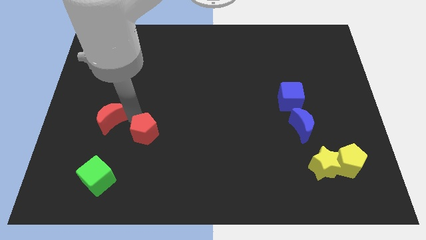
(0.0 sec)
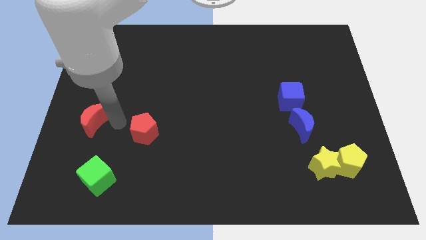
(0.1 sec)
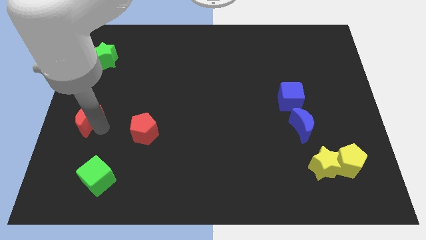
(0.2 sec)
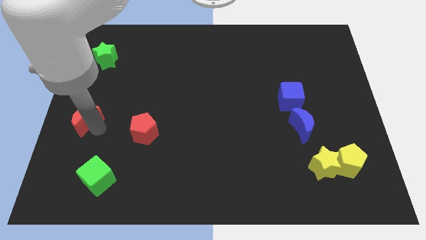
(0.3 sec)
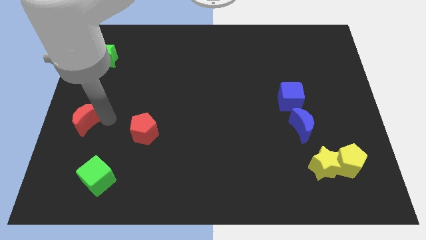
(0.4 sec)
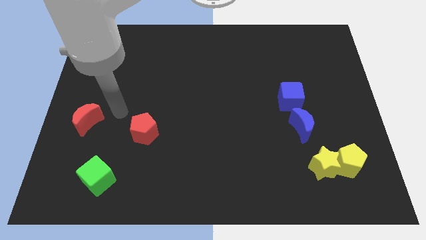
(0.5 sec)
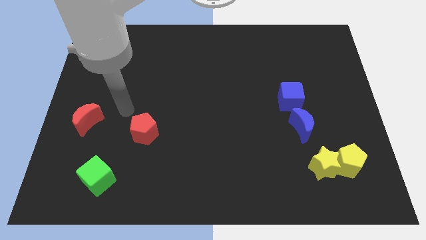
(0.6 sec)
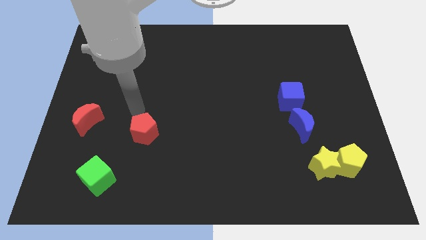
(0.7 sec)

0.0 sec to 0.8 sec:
slide the red crescent slightly to the left

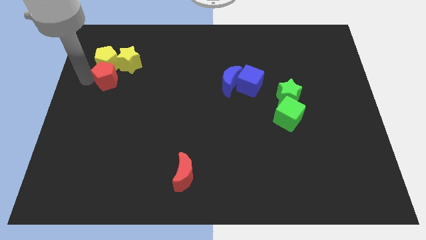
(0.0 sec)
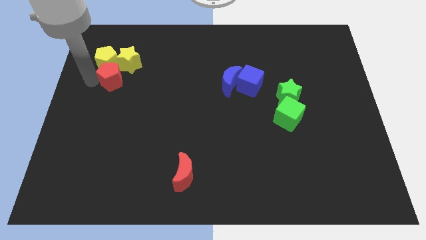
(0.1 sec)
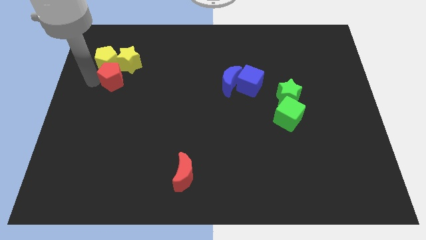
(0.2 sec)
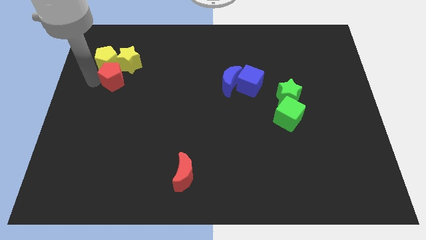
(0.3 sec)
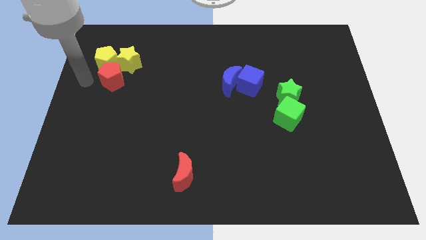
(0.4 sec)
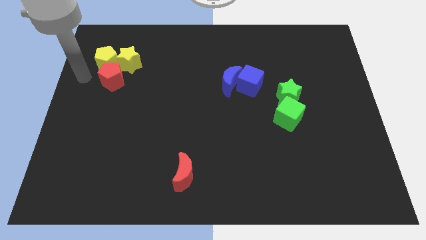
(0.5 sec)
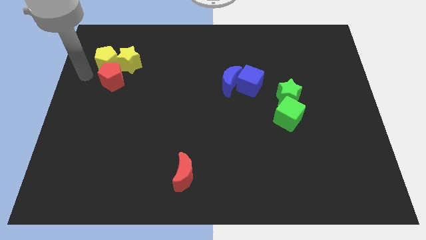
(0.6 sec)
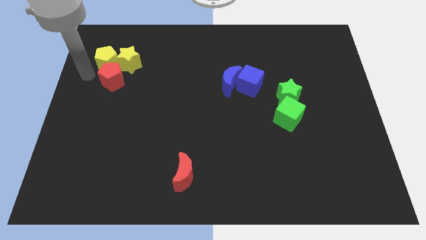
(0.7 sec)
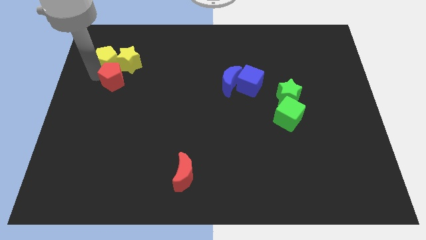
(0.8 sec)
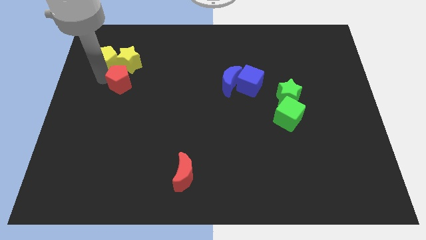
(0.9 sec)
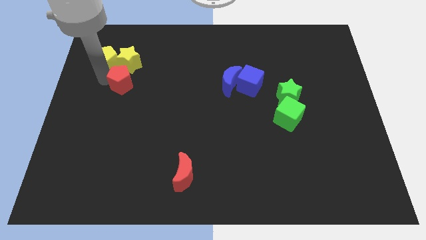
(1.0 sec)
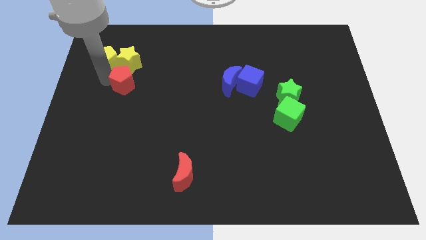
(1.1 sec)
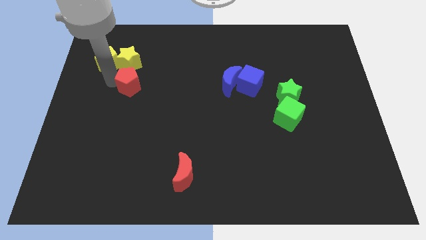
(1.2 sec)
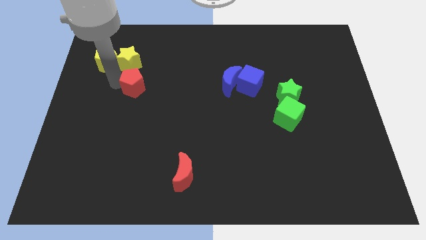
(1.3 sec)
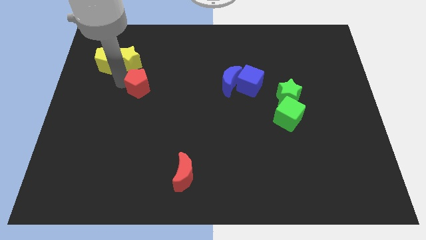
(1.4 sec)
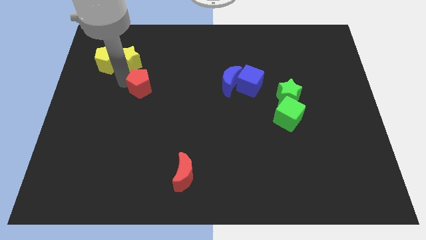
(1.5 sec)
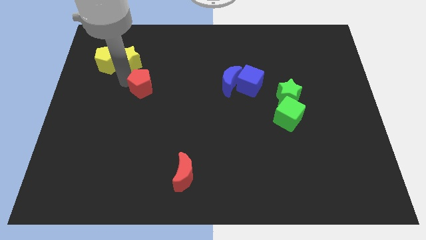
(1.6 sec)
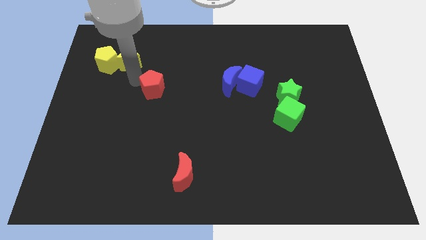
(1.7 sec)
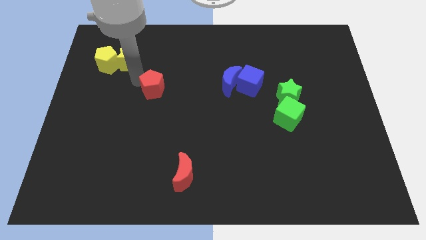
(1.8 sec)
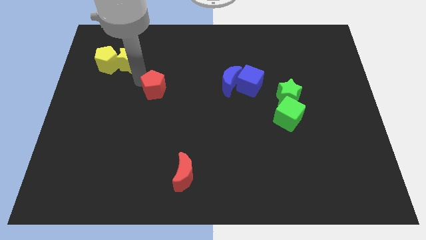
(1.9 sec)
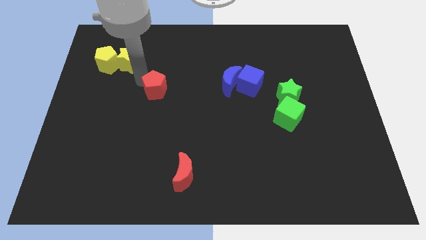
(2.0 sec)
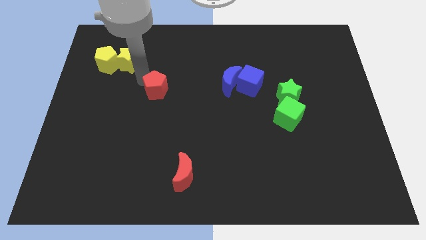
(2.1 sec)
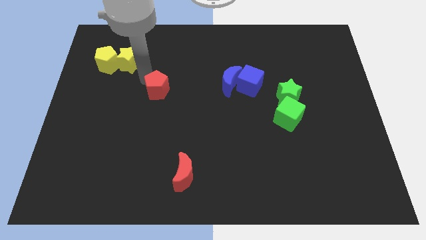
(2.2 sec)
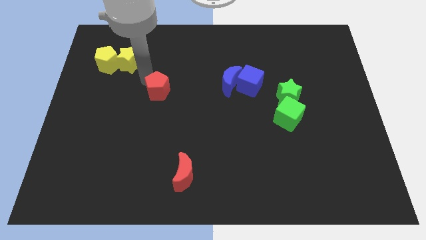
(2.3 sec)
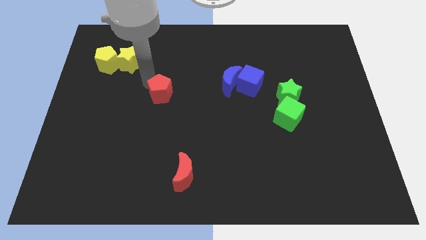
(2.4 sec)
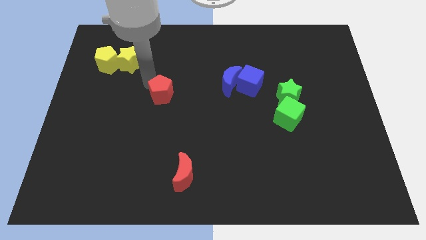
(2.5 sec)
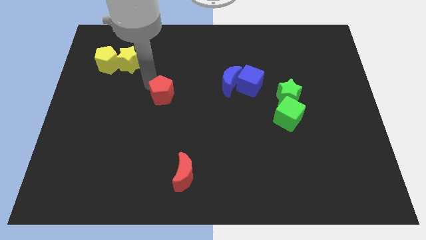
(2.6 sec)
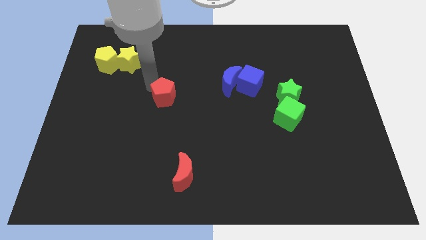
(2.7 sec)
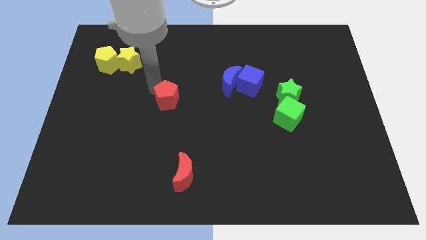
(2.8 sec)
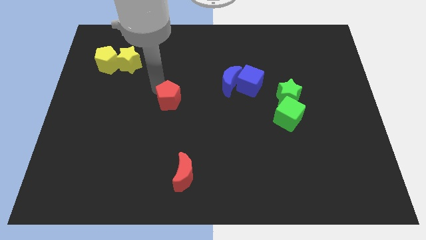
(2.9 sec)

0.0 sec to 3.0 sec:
push the red pentagon to the vertical bottom of the yellow star

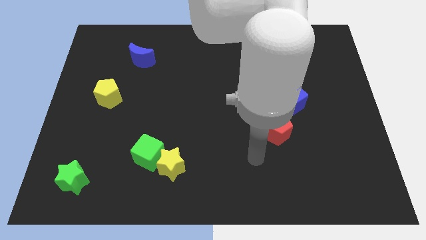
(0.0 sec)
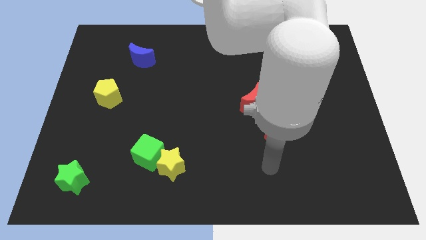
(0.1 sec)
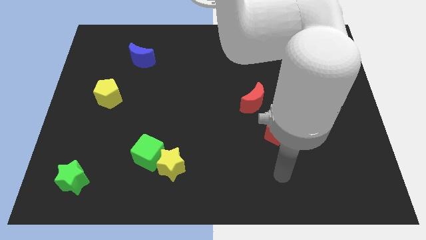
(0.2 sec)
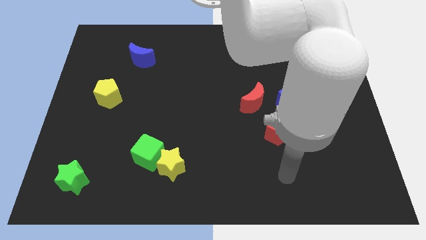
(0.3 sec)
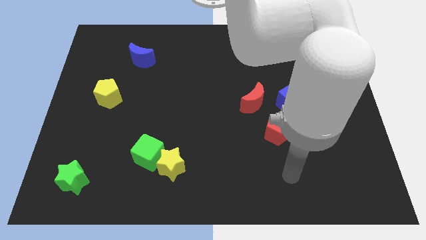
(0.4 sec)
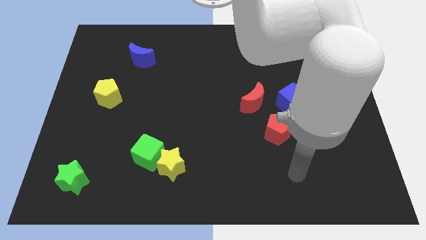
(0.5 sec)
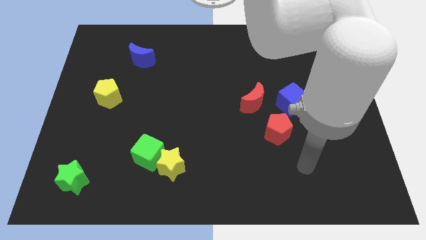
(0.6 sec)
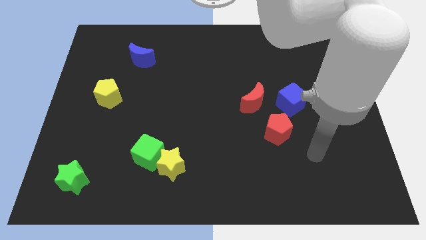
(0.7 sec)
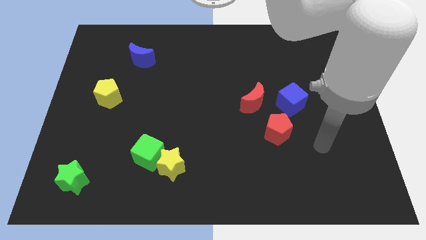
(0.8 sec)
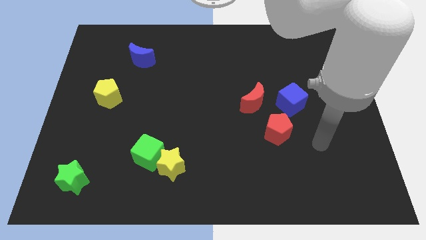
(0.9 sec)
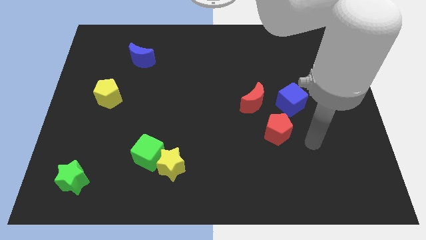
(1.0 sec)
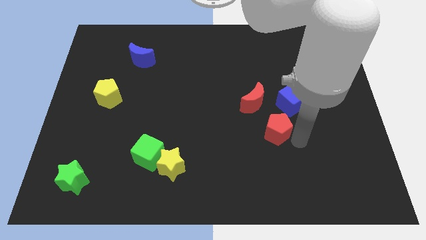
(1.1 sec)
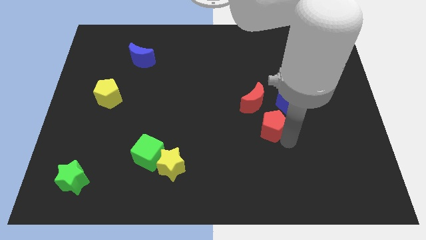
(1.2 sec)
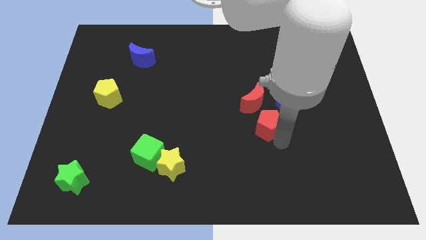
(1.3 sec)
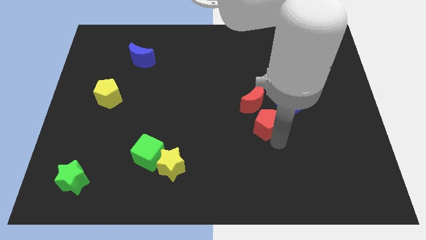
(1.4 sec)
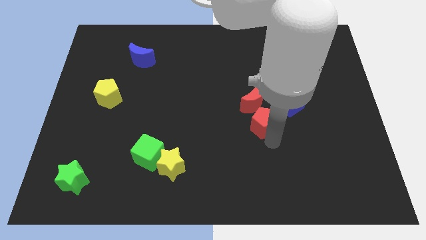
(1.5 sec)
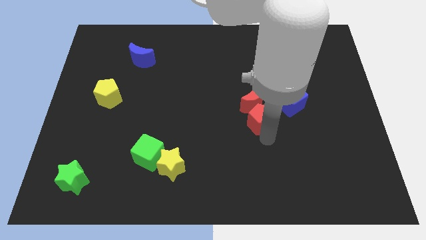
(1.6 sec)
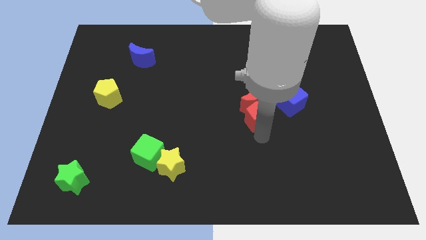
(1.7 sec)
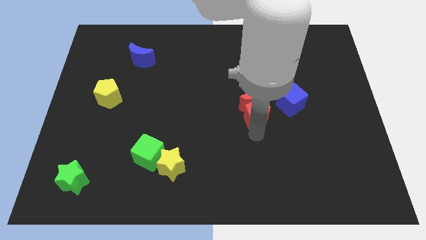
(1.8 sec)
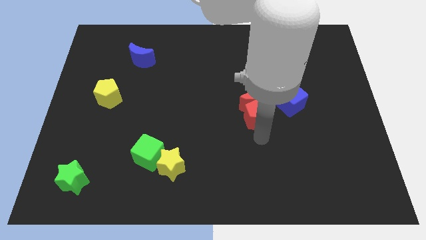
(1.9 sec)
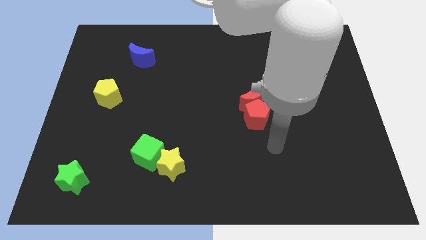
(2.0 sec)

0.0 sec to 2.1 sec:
push the red pentagon into the red crescent

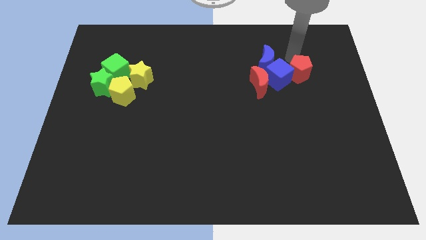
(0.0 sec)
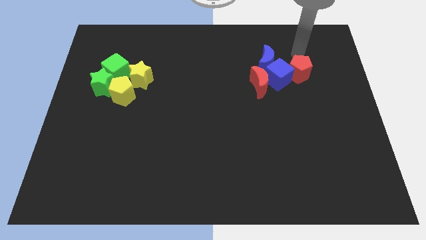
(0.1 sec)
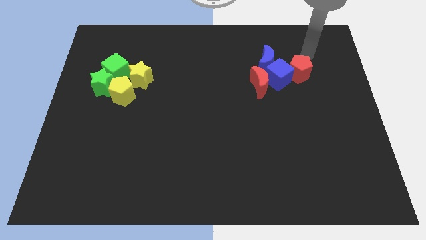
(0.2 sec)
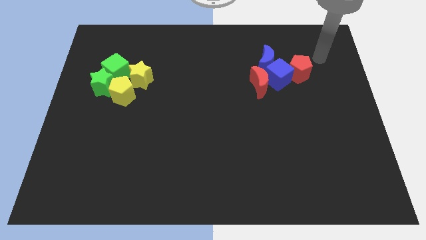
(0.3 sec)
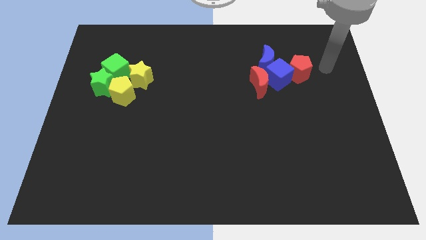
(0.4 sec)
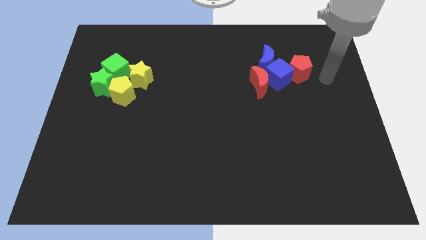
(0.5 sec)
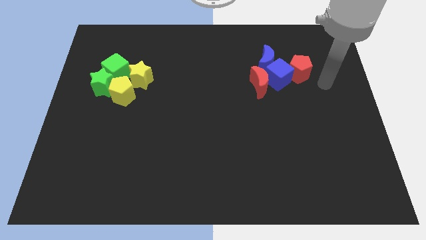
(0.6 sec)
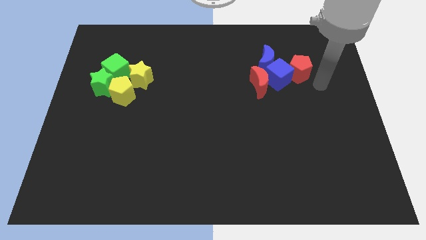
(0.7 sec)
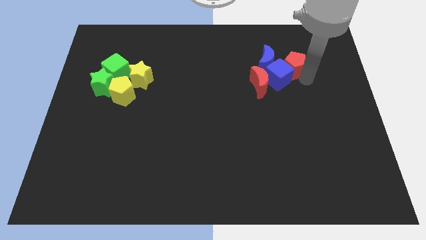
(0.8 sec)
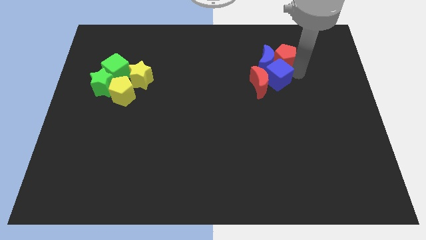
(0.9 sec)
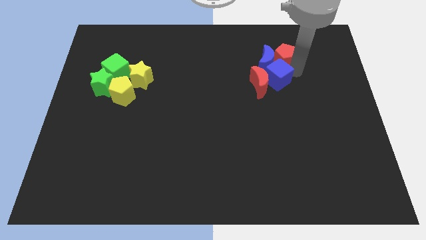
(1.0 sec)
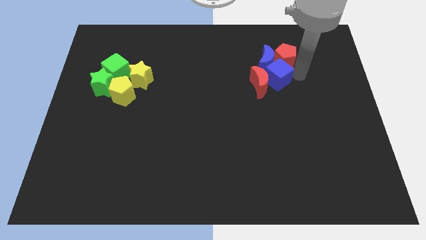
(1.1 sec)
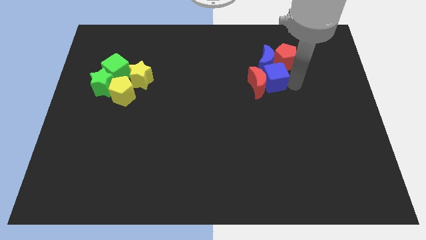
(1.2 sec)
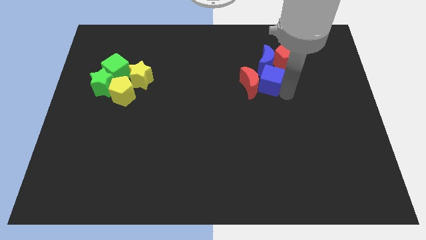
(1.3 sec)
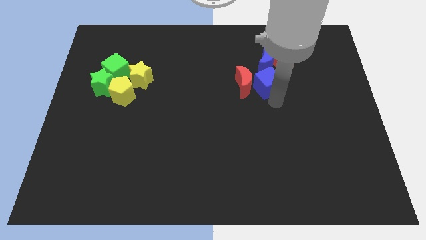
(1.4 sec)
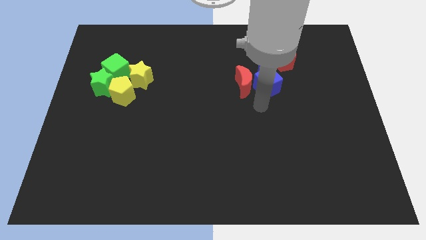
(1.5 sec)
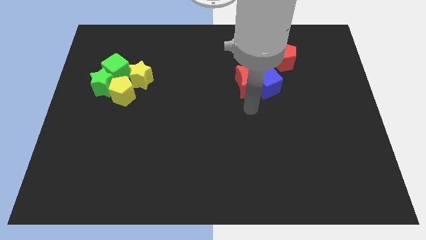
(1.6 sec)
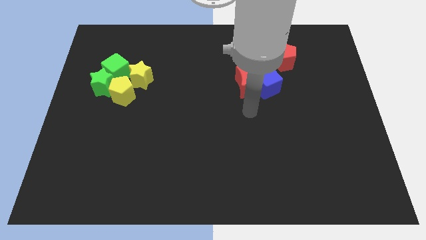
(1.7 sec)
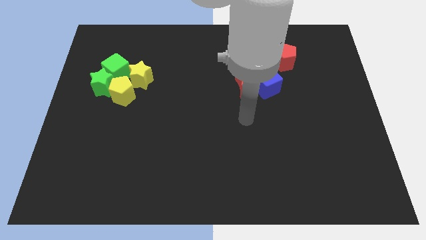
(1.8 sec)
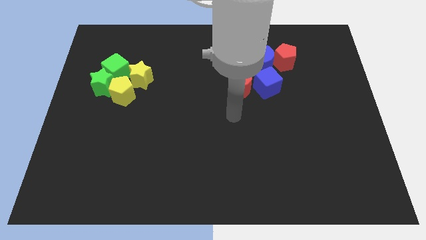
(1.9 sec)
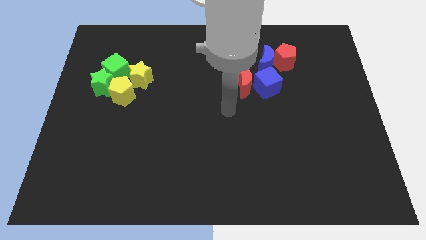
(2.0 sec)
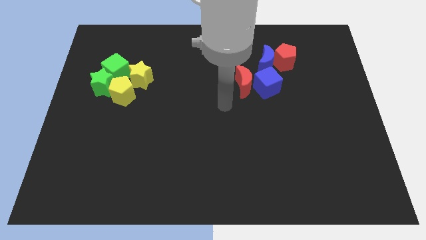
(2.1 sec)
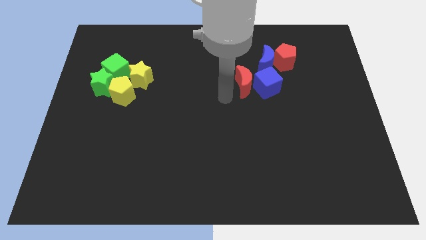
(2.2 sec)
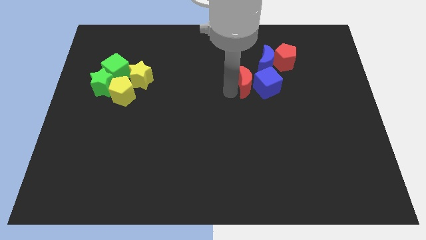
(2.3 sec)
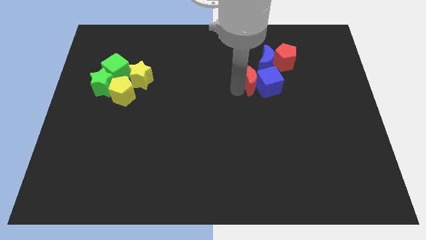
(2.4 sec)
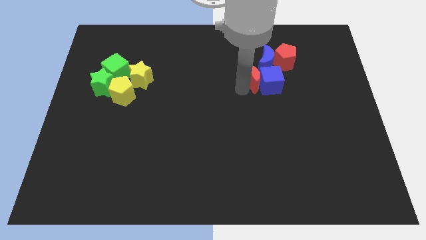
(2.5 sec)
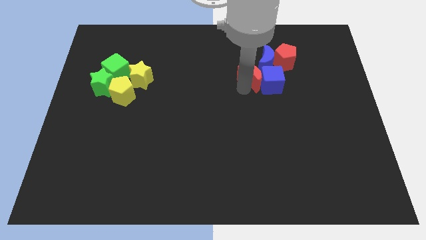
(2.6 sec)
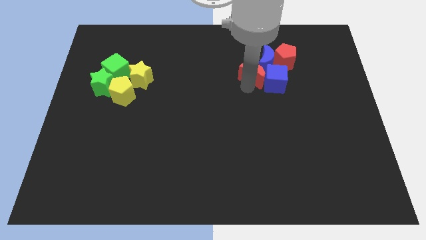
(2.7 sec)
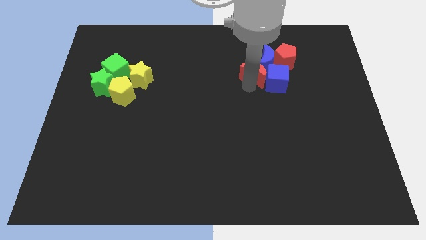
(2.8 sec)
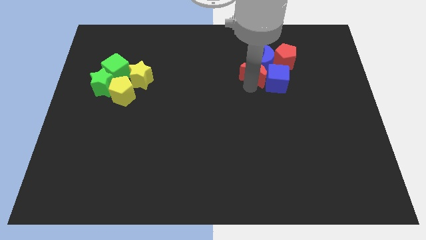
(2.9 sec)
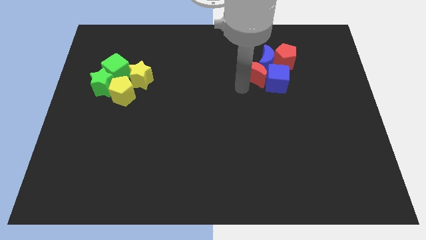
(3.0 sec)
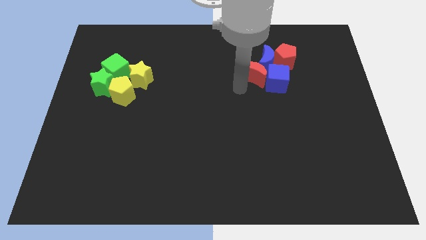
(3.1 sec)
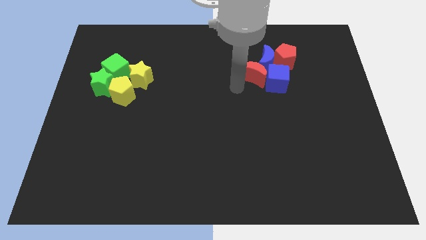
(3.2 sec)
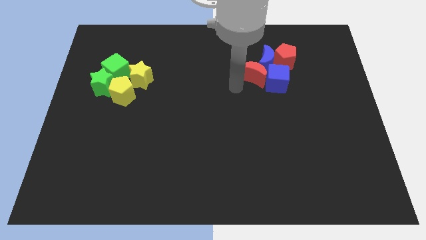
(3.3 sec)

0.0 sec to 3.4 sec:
push the red pentagon and red crescent into the blue blocks
